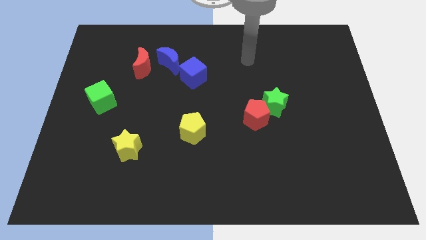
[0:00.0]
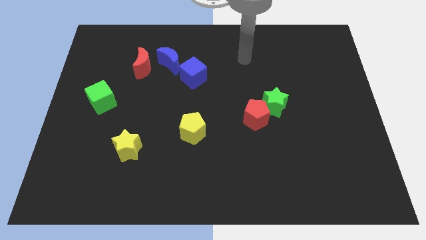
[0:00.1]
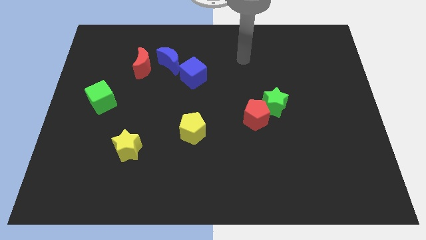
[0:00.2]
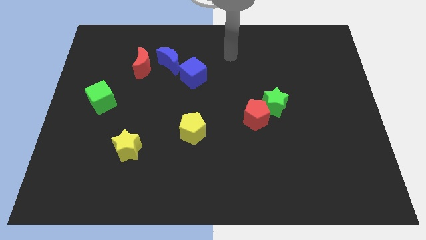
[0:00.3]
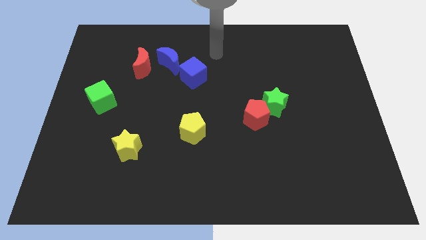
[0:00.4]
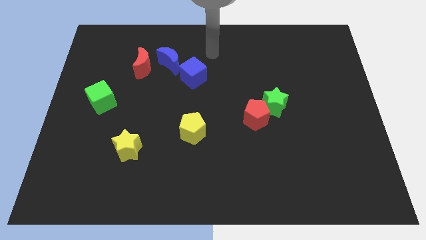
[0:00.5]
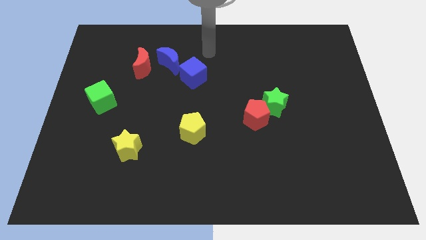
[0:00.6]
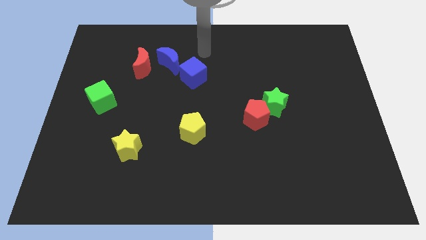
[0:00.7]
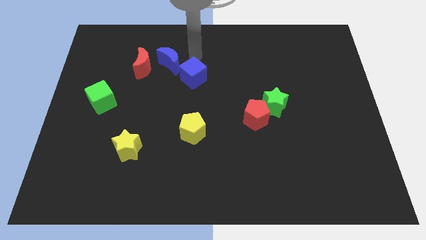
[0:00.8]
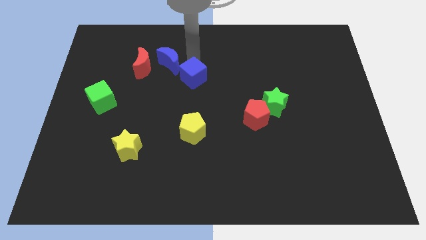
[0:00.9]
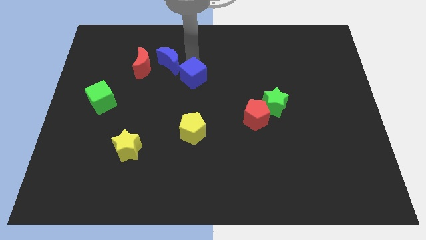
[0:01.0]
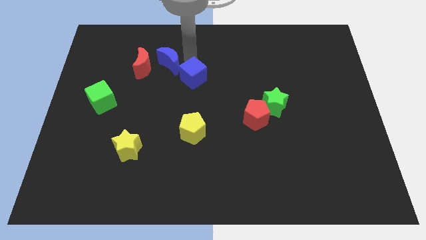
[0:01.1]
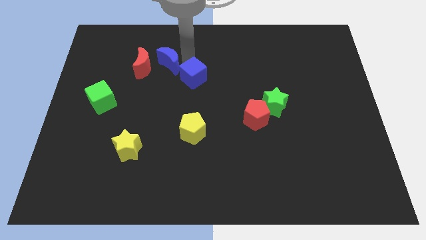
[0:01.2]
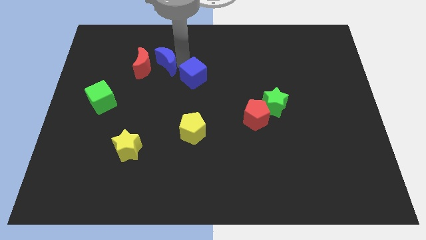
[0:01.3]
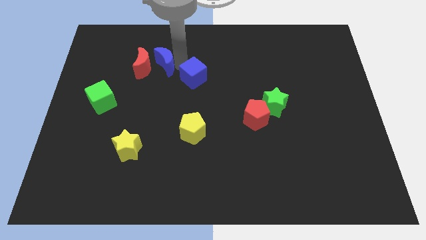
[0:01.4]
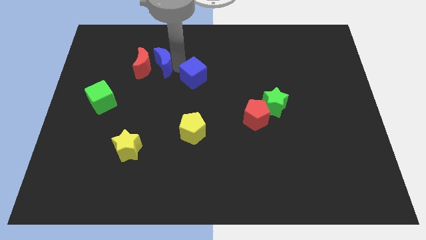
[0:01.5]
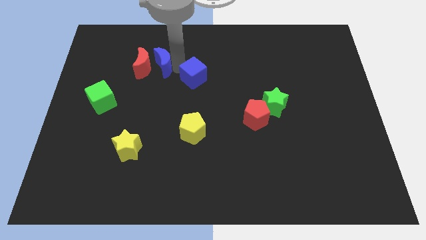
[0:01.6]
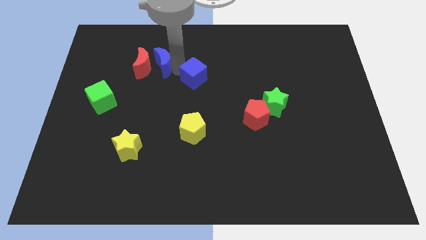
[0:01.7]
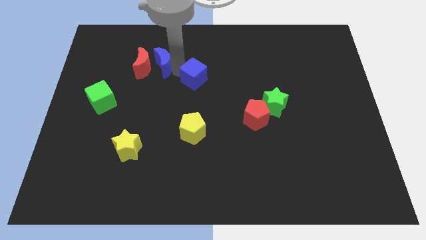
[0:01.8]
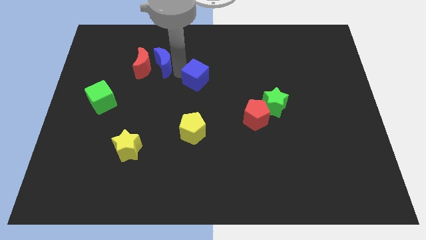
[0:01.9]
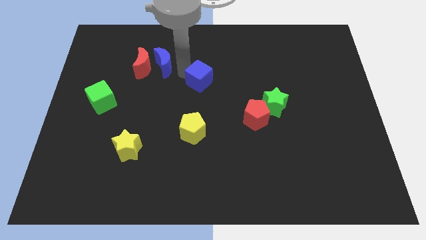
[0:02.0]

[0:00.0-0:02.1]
separate blue blocks from each other

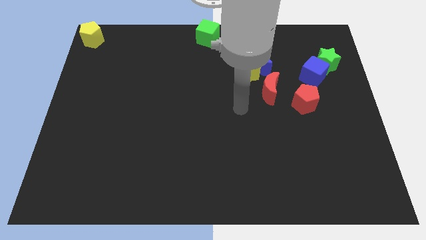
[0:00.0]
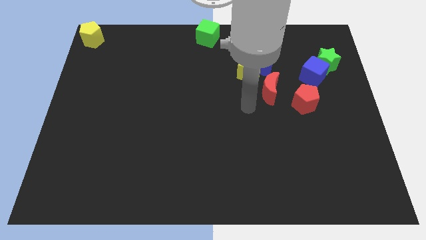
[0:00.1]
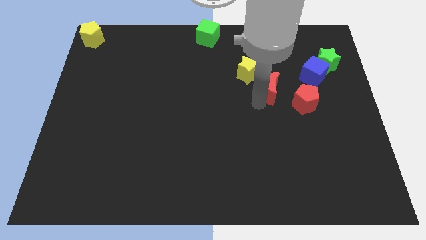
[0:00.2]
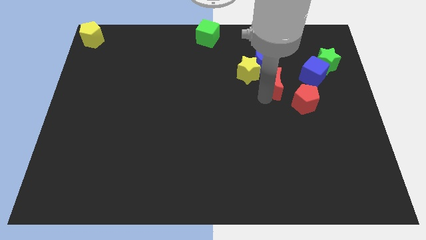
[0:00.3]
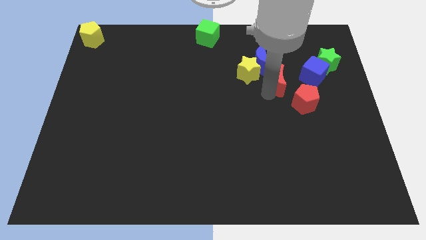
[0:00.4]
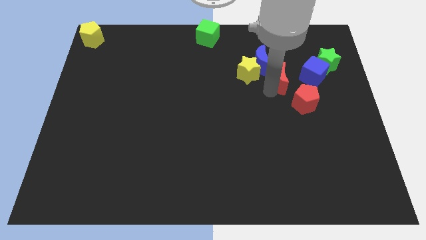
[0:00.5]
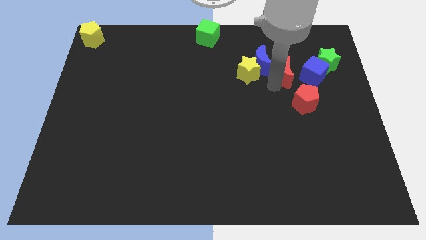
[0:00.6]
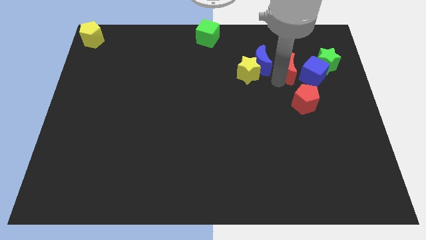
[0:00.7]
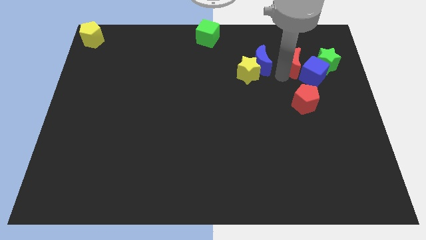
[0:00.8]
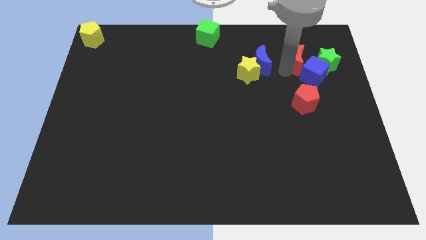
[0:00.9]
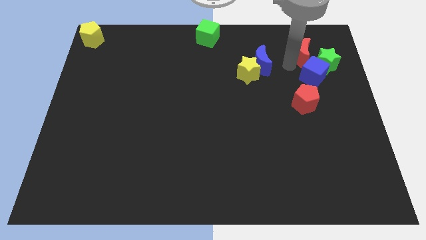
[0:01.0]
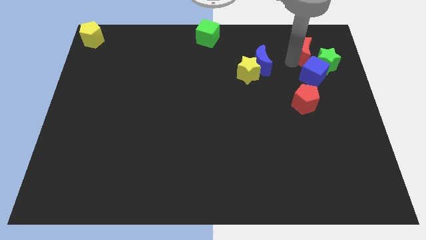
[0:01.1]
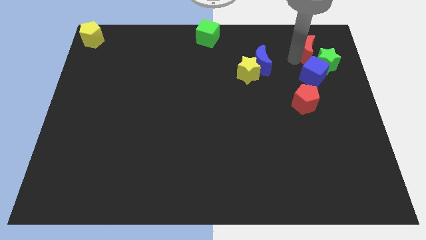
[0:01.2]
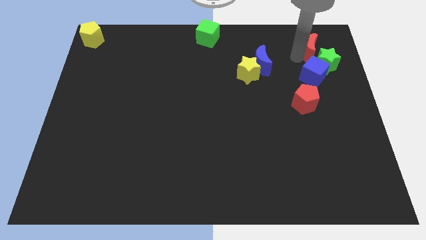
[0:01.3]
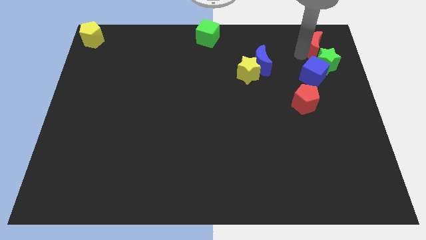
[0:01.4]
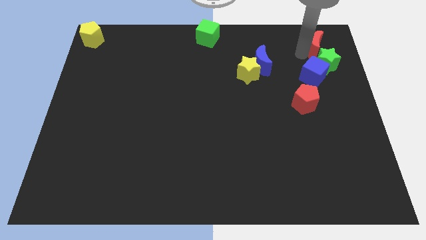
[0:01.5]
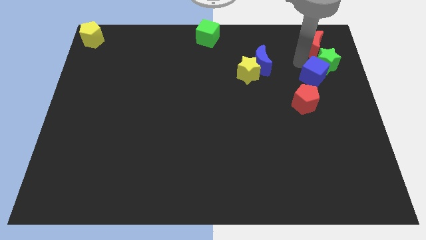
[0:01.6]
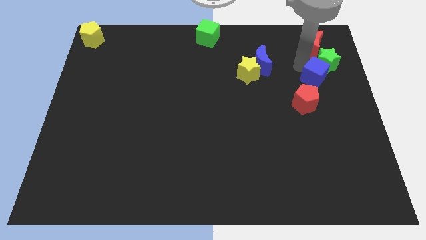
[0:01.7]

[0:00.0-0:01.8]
separate red moon from the blue moon

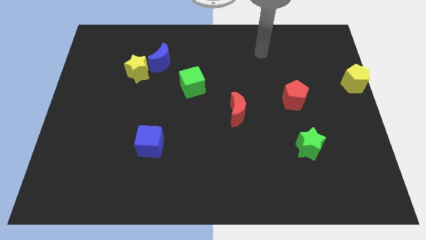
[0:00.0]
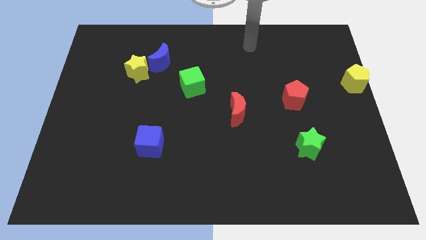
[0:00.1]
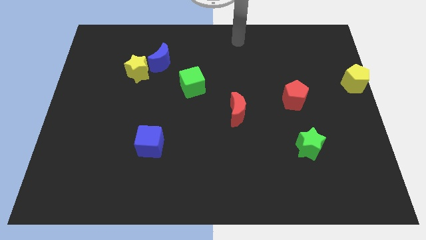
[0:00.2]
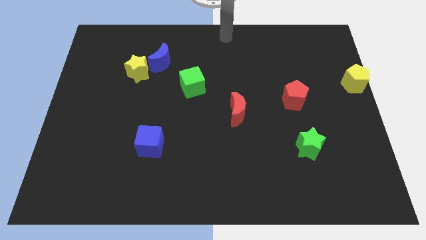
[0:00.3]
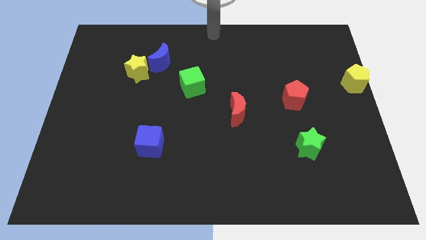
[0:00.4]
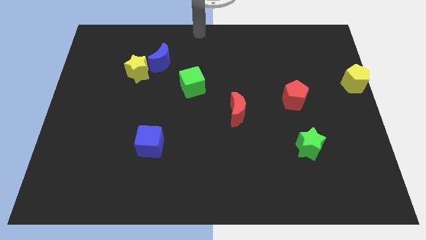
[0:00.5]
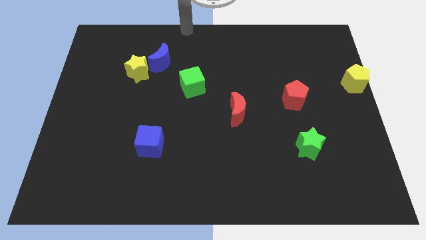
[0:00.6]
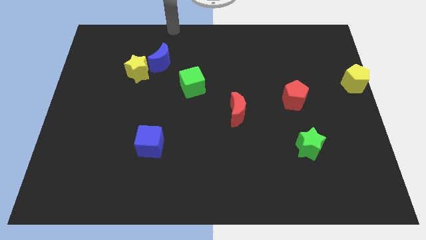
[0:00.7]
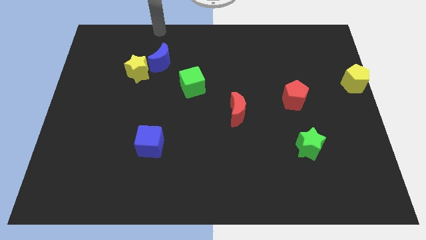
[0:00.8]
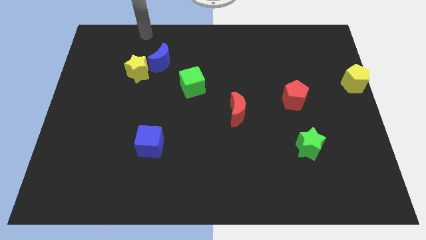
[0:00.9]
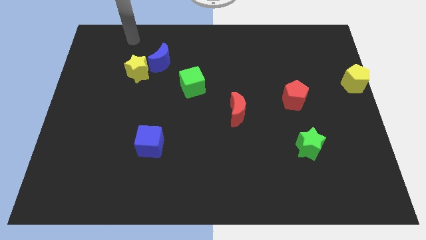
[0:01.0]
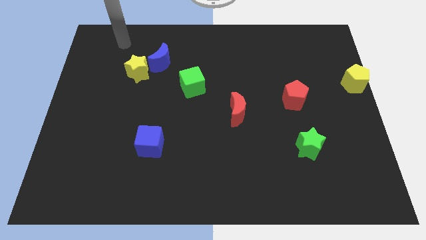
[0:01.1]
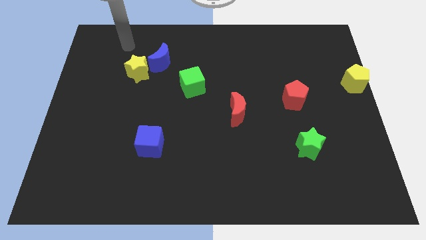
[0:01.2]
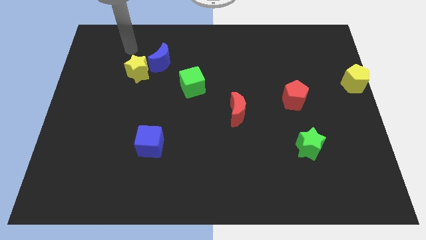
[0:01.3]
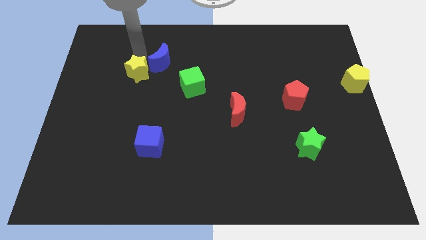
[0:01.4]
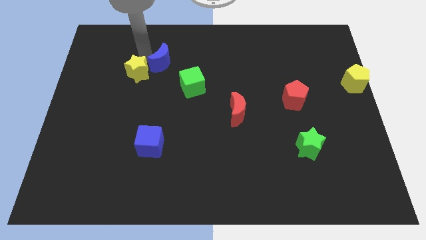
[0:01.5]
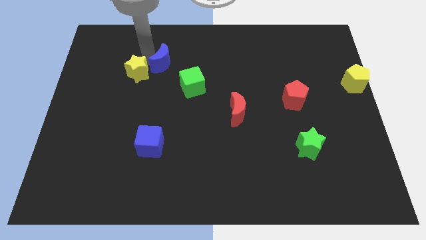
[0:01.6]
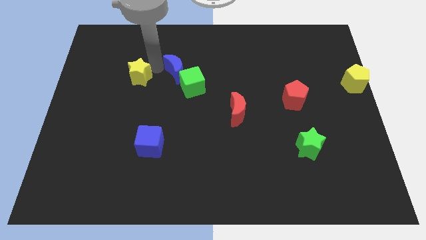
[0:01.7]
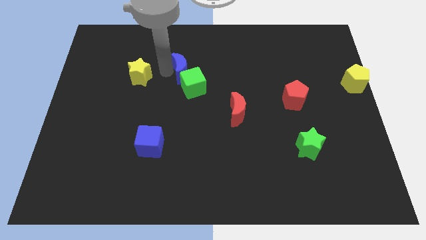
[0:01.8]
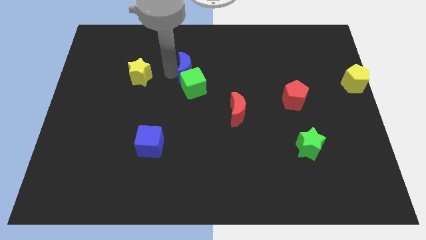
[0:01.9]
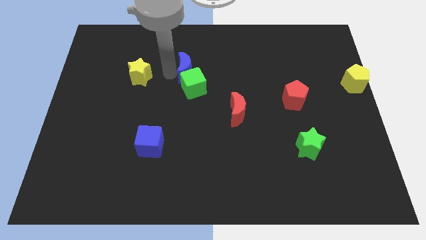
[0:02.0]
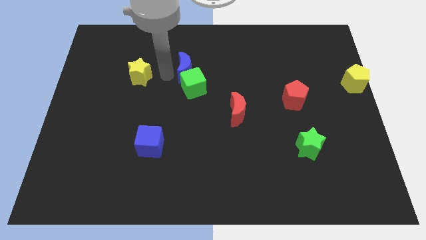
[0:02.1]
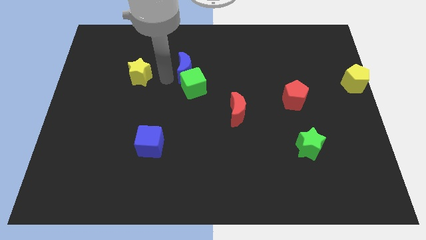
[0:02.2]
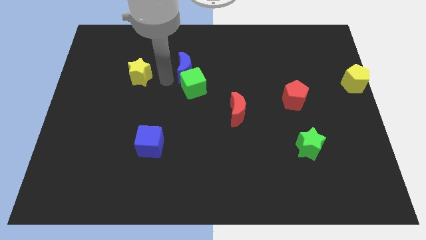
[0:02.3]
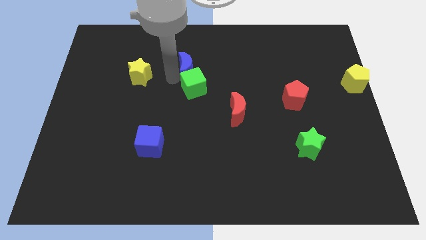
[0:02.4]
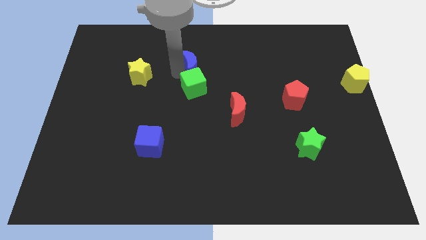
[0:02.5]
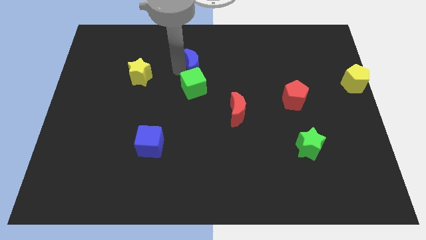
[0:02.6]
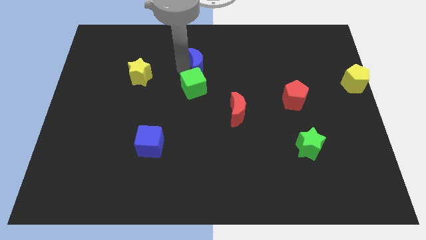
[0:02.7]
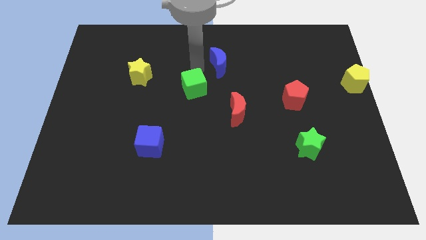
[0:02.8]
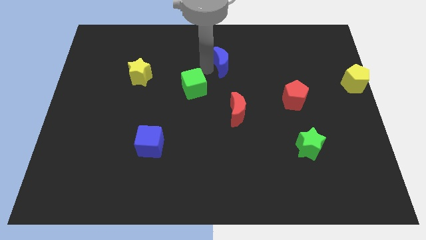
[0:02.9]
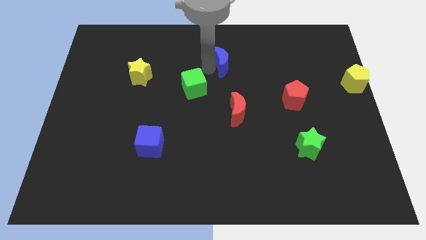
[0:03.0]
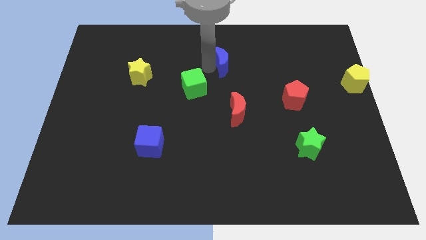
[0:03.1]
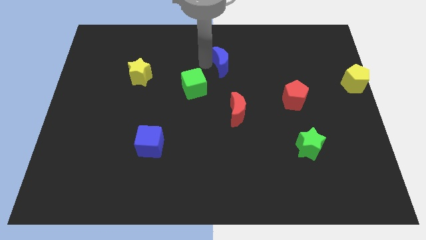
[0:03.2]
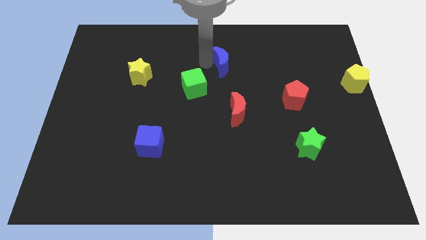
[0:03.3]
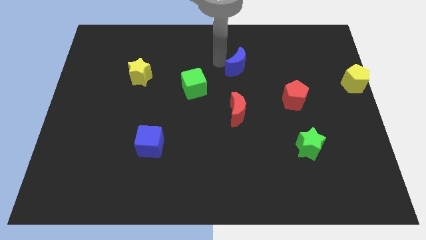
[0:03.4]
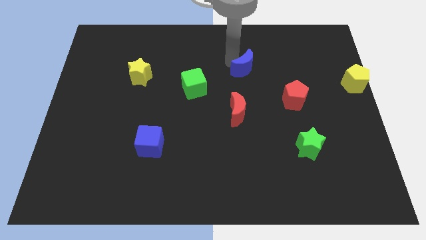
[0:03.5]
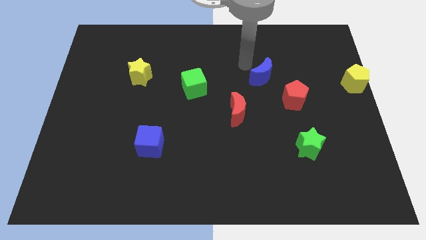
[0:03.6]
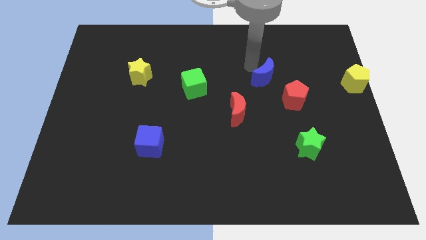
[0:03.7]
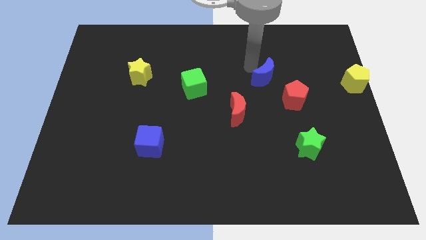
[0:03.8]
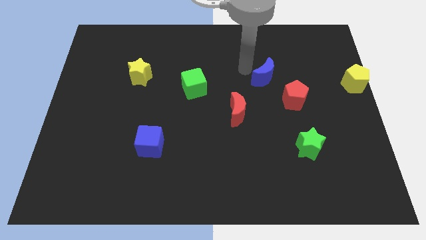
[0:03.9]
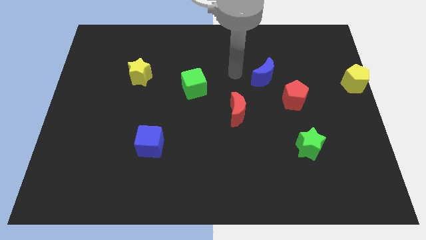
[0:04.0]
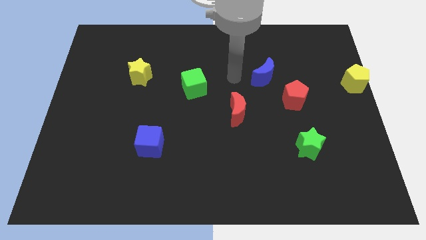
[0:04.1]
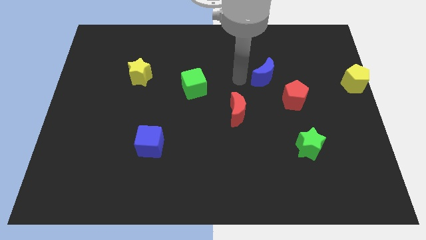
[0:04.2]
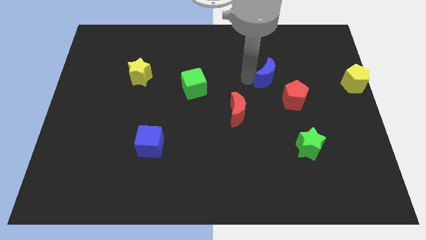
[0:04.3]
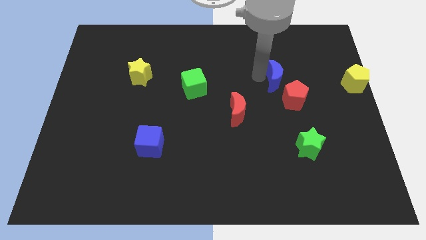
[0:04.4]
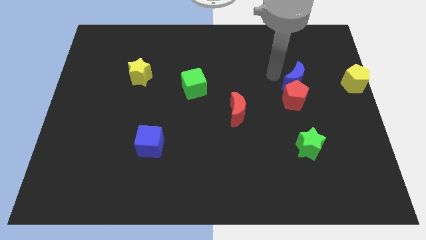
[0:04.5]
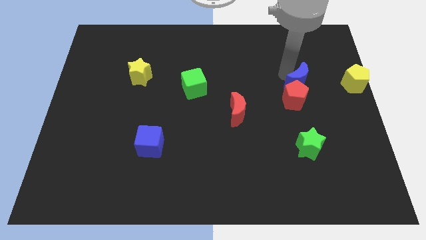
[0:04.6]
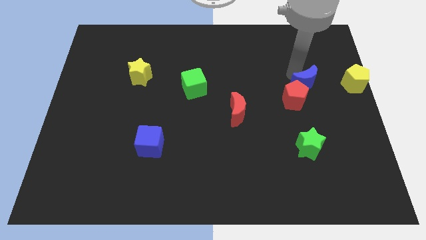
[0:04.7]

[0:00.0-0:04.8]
place blue moon above red pentagon
